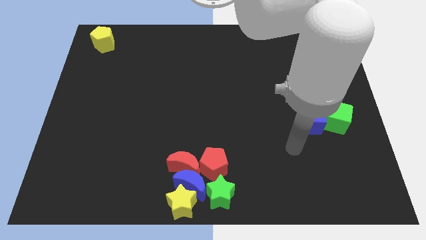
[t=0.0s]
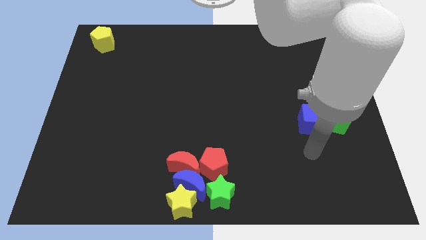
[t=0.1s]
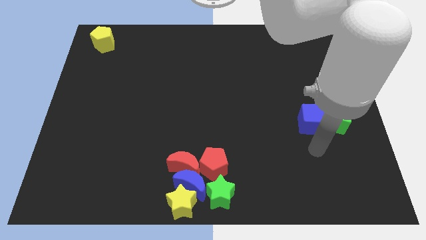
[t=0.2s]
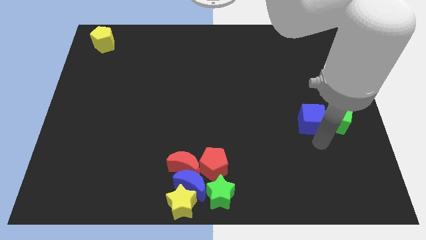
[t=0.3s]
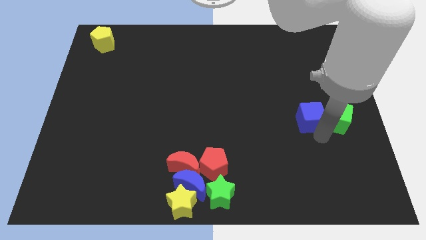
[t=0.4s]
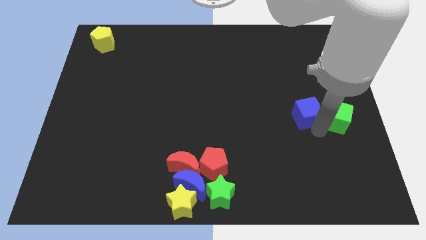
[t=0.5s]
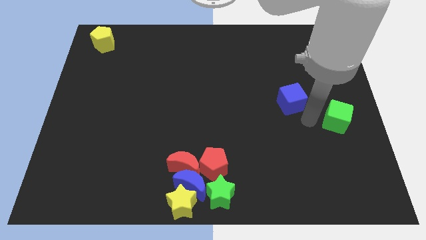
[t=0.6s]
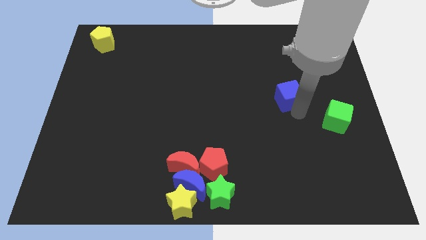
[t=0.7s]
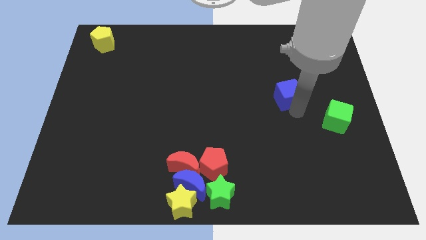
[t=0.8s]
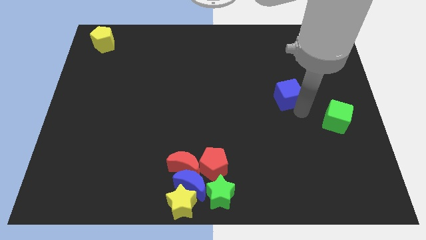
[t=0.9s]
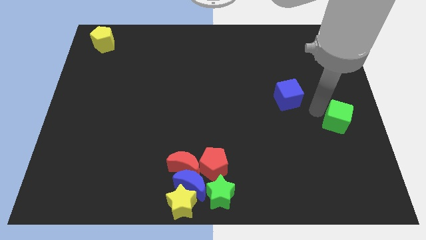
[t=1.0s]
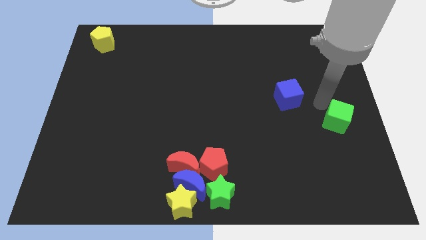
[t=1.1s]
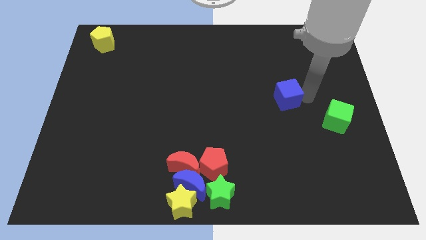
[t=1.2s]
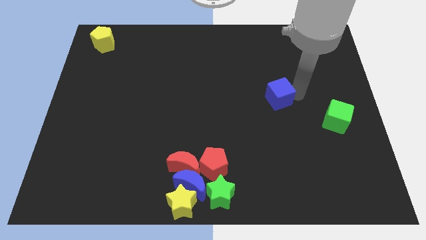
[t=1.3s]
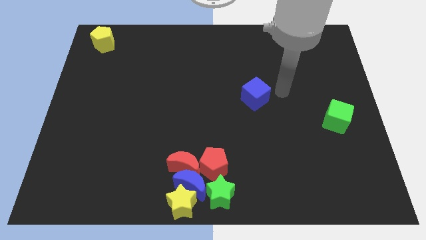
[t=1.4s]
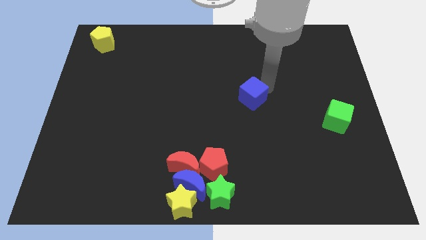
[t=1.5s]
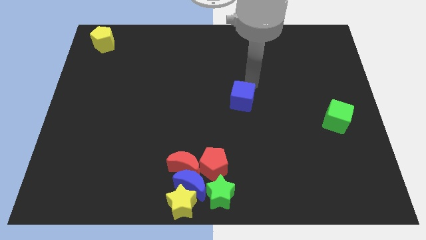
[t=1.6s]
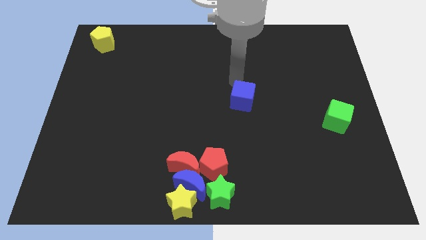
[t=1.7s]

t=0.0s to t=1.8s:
separate the blue cube from the green cube

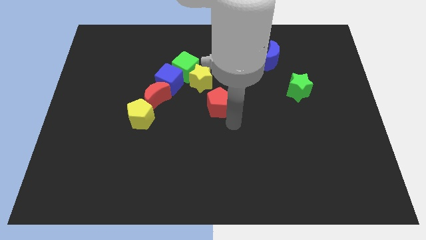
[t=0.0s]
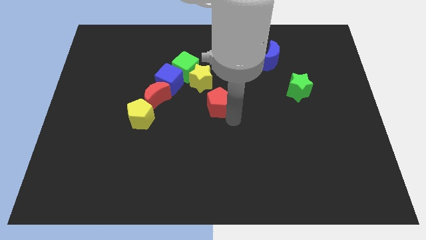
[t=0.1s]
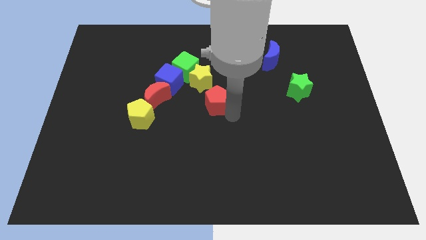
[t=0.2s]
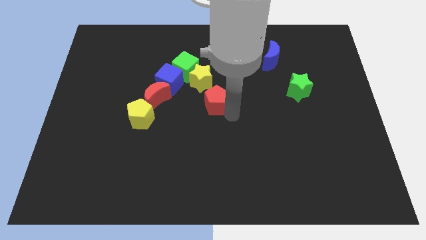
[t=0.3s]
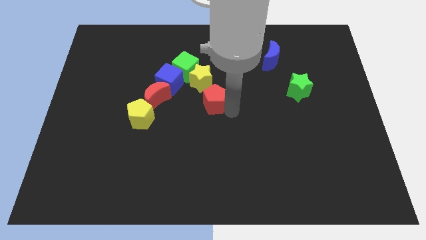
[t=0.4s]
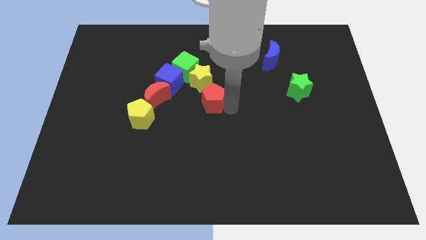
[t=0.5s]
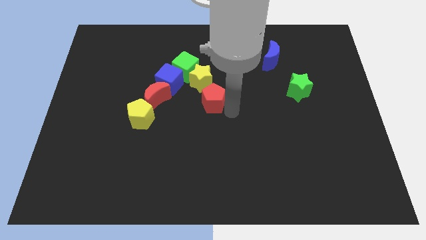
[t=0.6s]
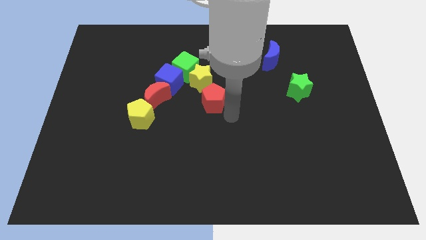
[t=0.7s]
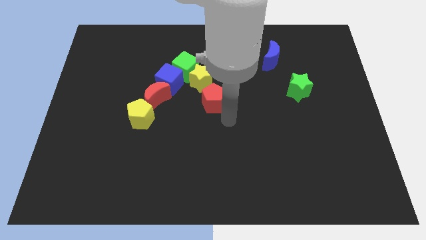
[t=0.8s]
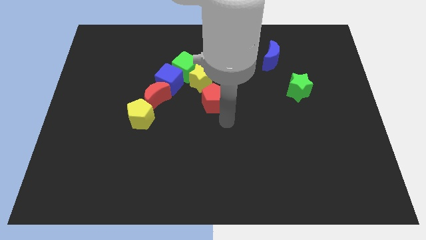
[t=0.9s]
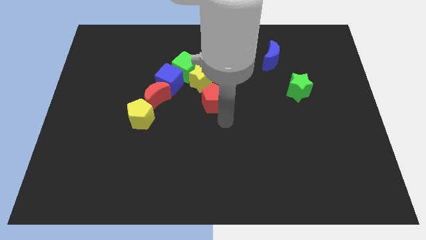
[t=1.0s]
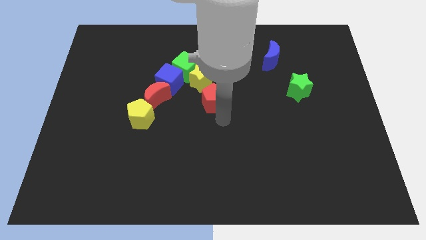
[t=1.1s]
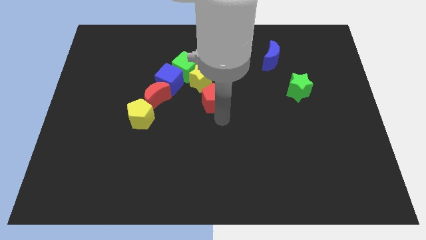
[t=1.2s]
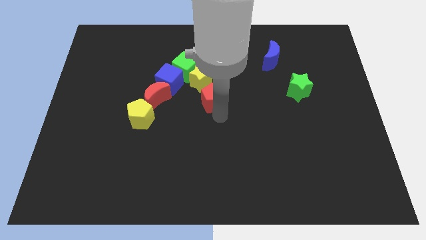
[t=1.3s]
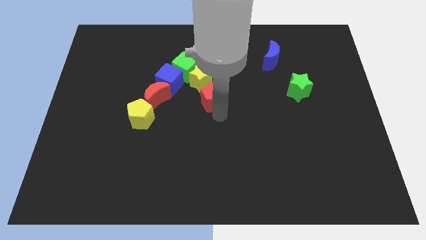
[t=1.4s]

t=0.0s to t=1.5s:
place the red pentagon below the yellow star to form a diagonal line

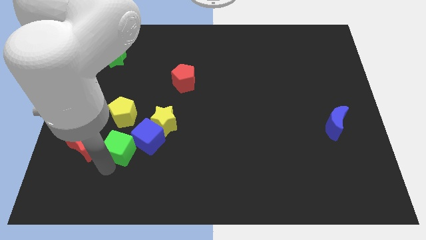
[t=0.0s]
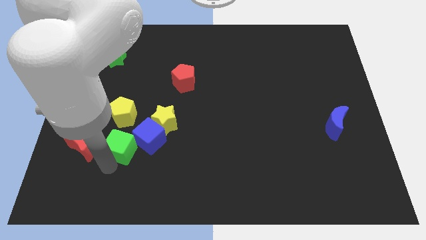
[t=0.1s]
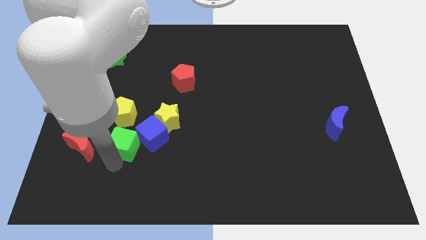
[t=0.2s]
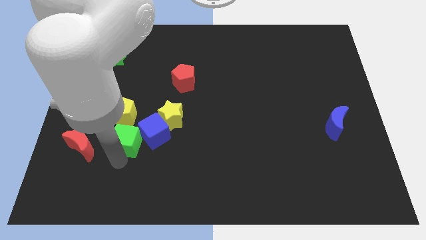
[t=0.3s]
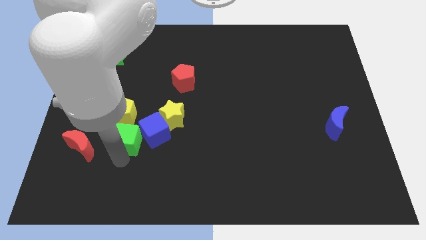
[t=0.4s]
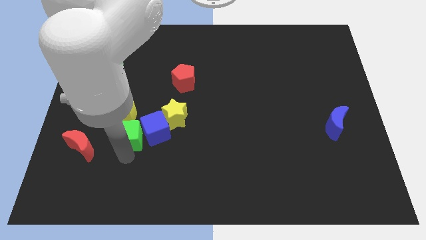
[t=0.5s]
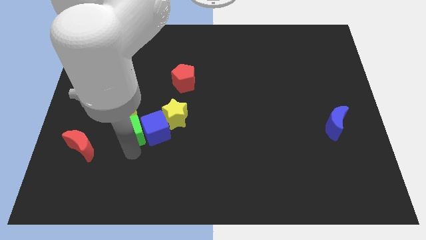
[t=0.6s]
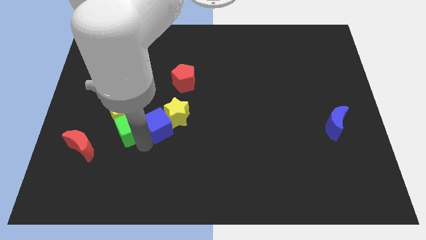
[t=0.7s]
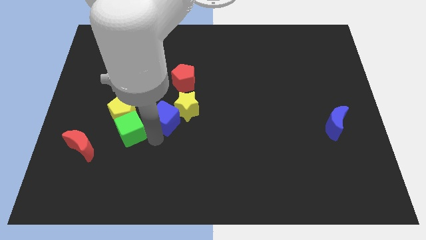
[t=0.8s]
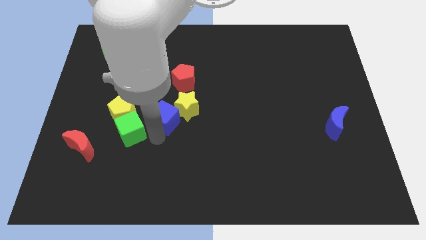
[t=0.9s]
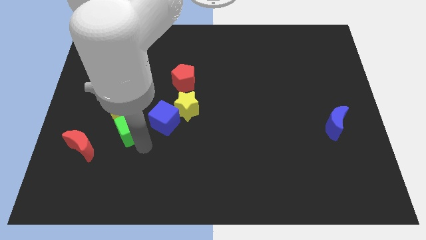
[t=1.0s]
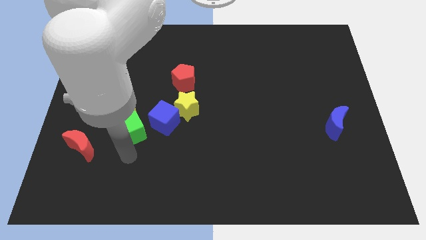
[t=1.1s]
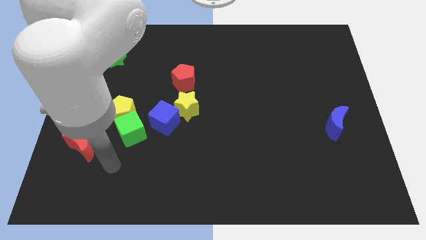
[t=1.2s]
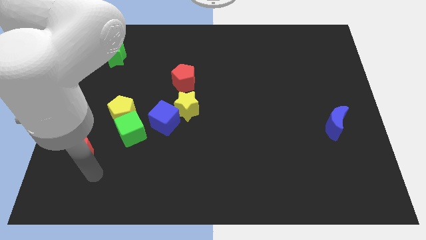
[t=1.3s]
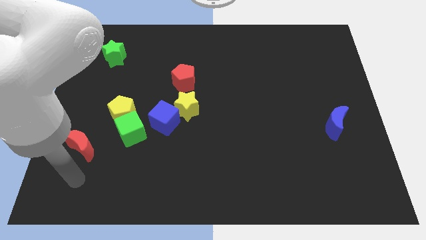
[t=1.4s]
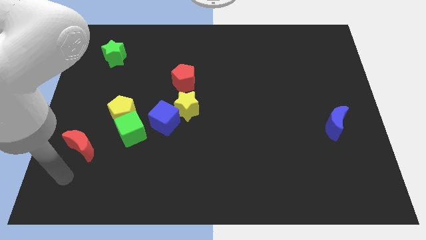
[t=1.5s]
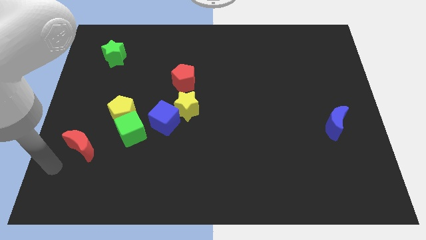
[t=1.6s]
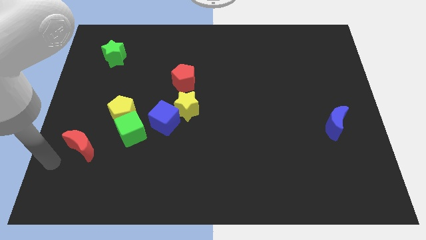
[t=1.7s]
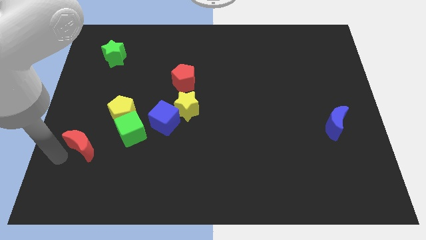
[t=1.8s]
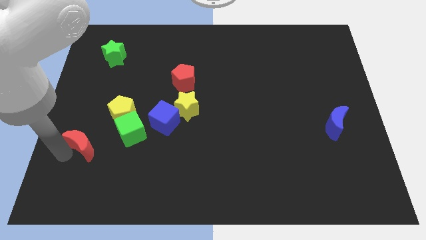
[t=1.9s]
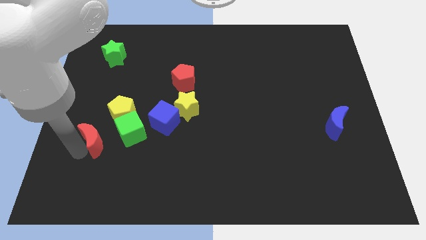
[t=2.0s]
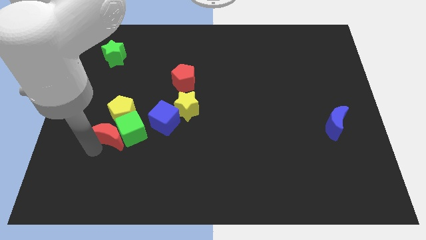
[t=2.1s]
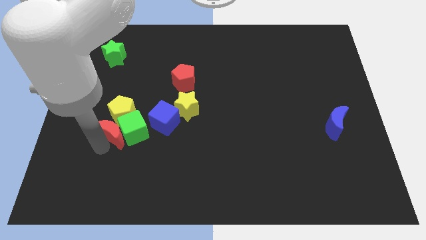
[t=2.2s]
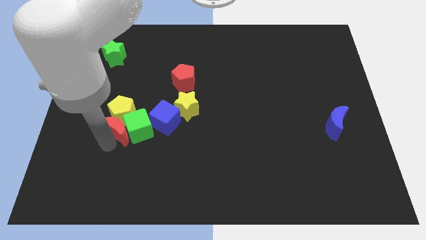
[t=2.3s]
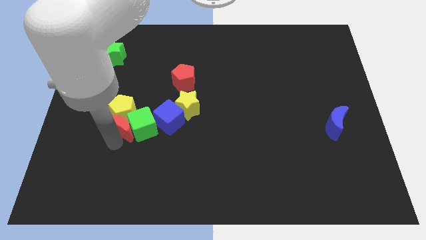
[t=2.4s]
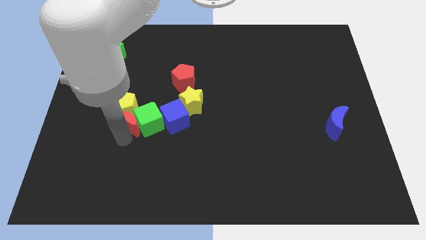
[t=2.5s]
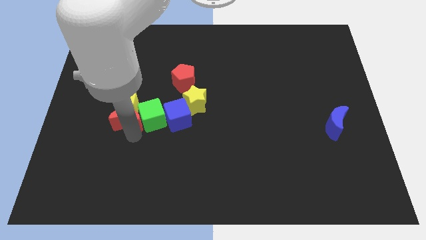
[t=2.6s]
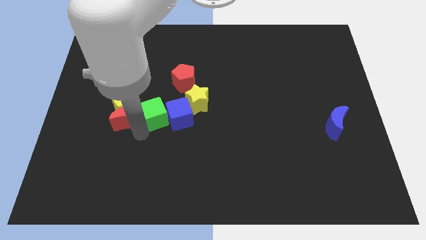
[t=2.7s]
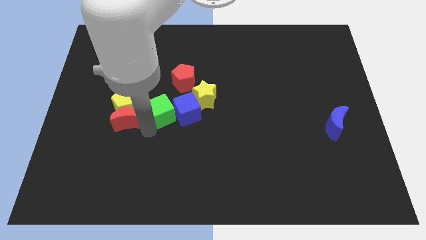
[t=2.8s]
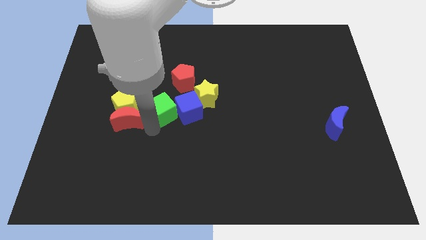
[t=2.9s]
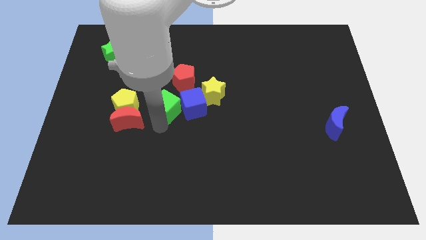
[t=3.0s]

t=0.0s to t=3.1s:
push green cube upwards

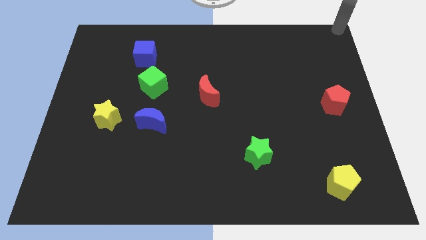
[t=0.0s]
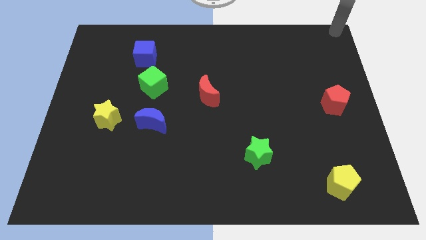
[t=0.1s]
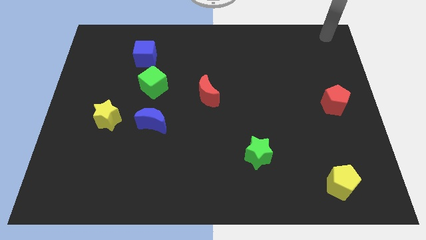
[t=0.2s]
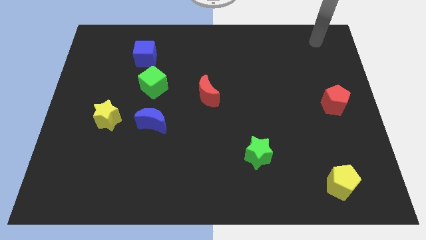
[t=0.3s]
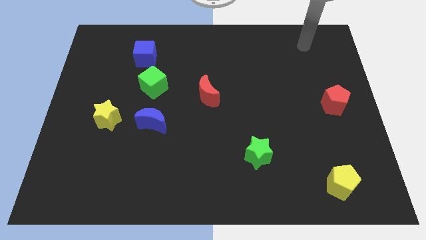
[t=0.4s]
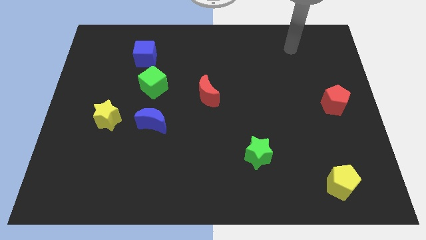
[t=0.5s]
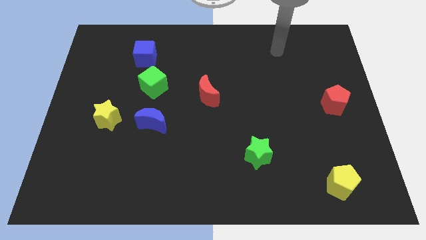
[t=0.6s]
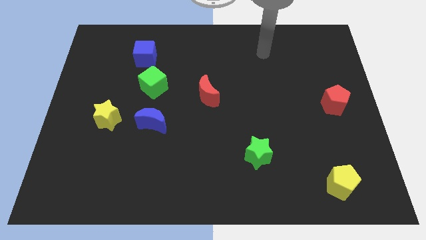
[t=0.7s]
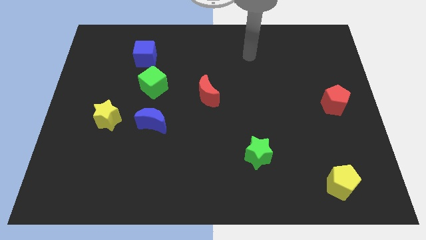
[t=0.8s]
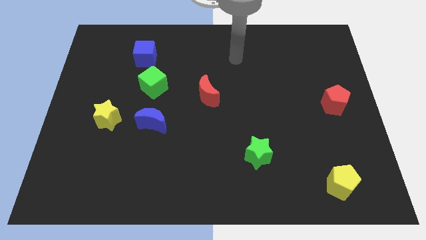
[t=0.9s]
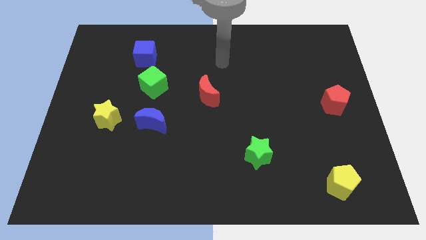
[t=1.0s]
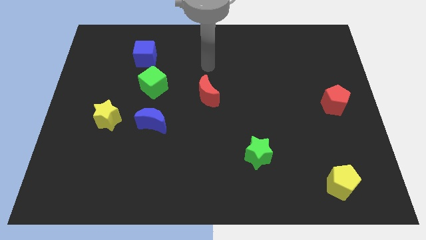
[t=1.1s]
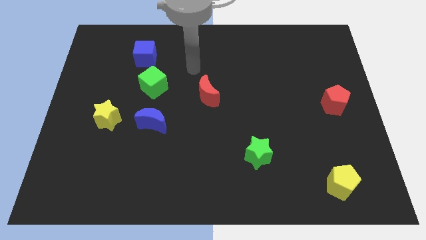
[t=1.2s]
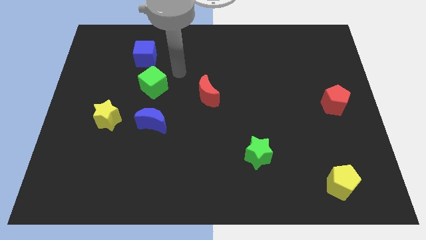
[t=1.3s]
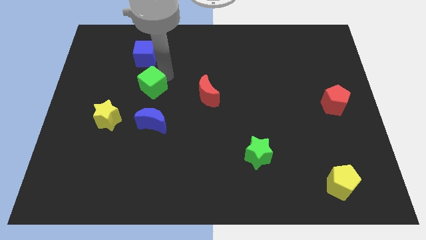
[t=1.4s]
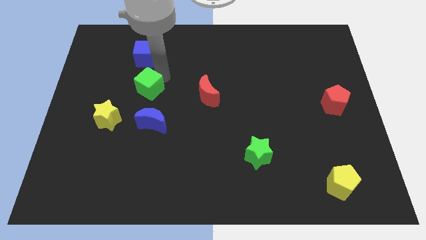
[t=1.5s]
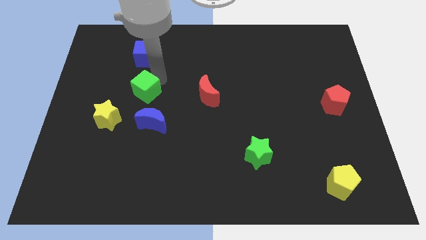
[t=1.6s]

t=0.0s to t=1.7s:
move arm to the green cube

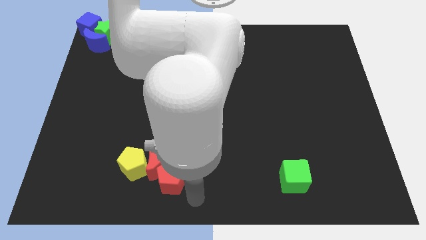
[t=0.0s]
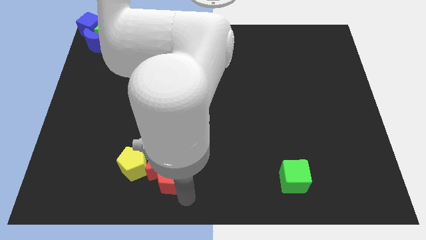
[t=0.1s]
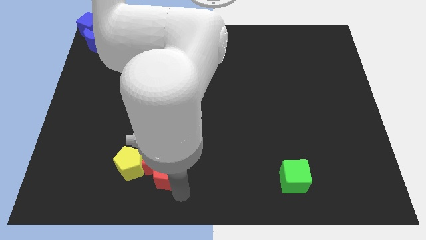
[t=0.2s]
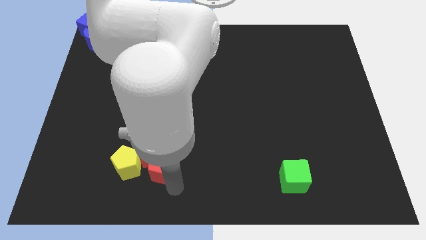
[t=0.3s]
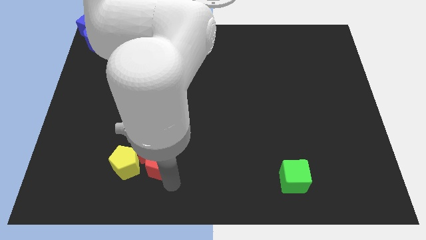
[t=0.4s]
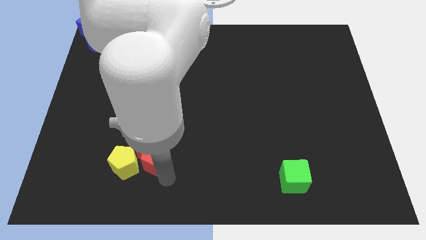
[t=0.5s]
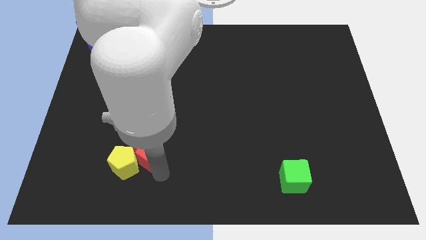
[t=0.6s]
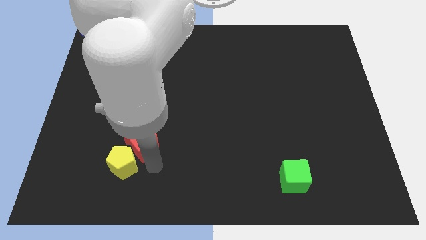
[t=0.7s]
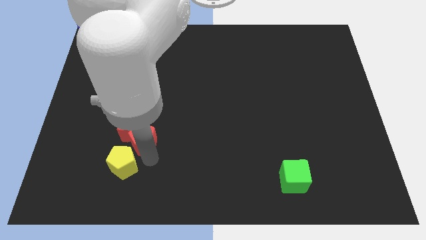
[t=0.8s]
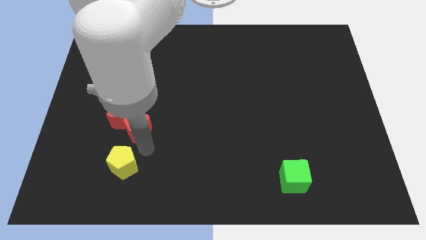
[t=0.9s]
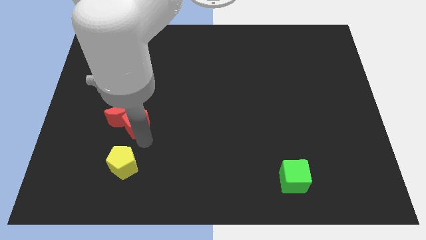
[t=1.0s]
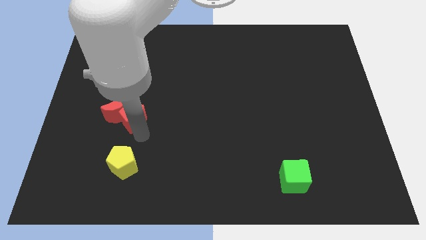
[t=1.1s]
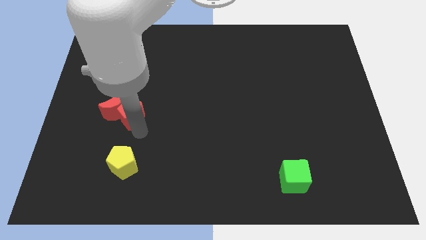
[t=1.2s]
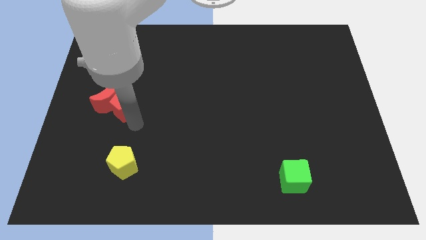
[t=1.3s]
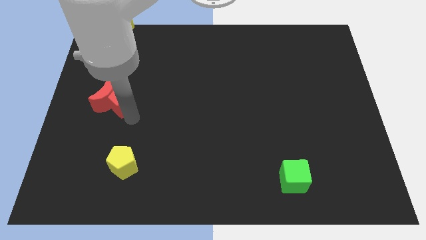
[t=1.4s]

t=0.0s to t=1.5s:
push the red pentagon and red moon diagonally upwards
